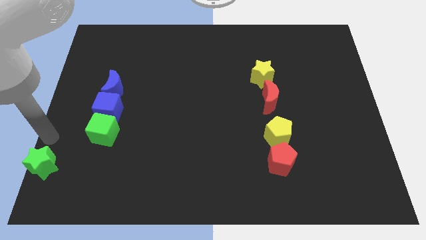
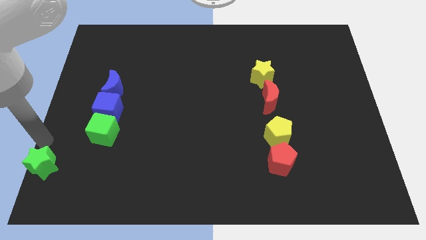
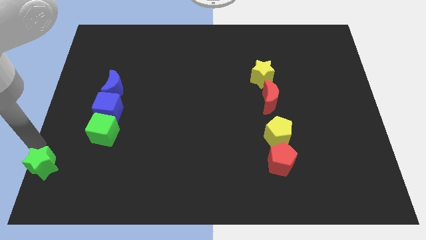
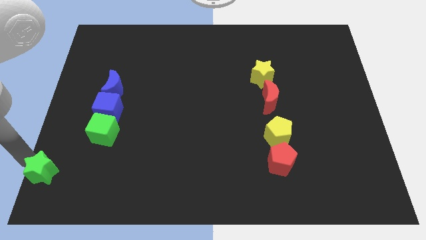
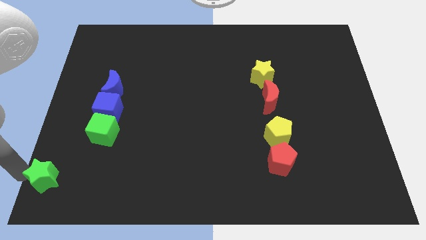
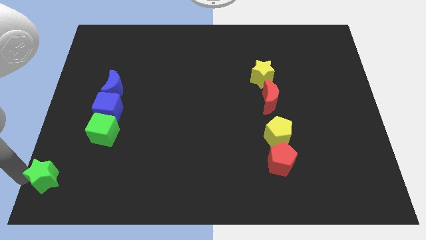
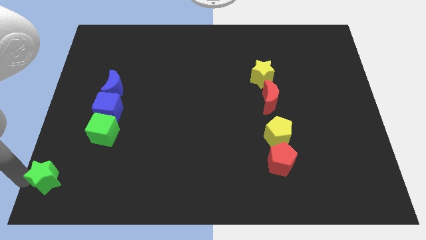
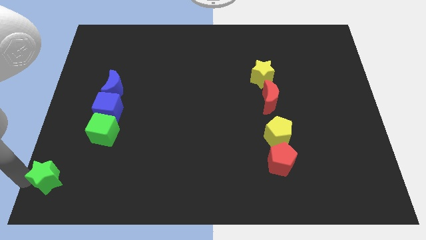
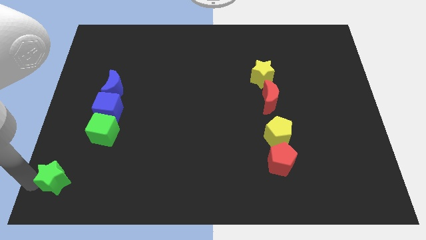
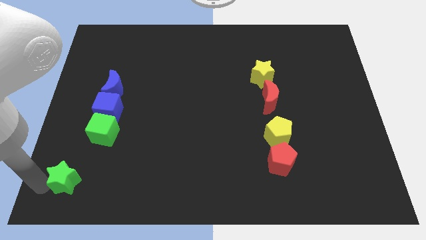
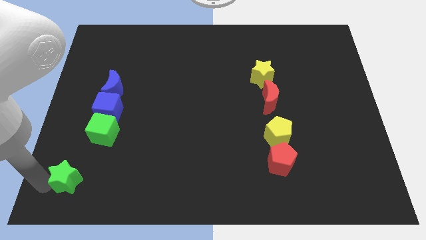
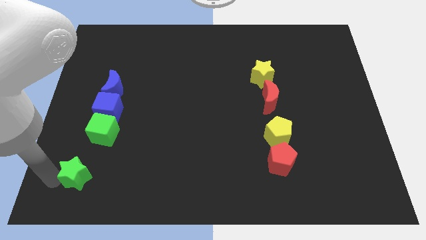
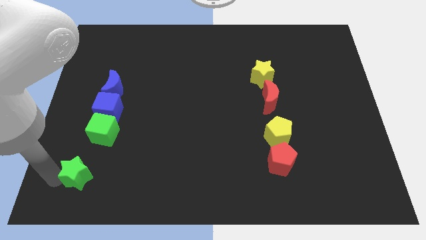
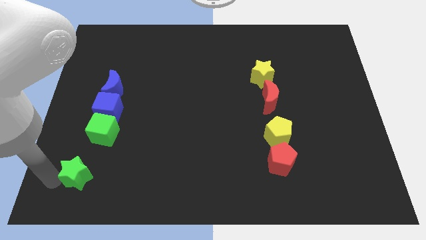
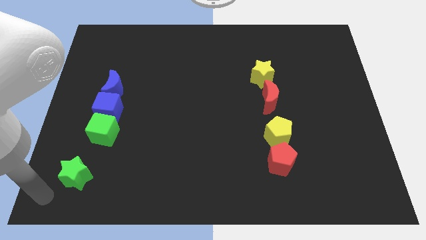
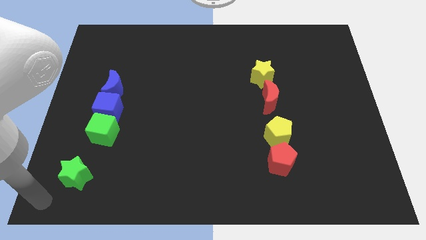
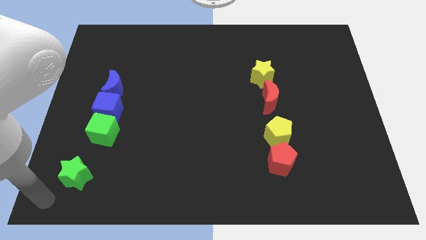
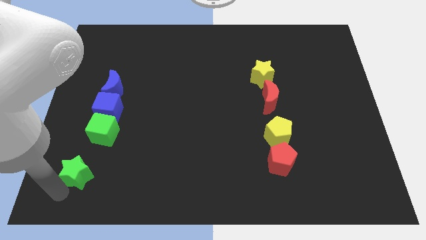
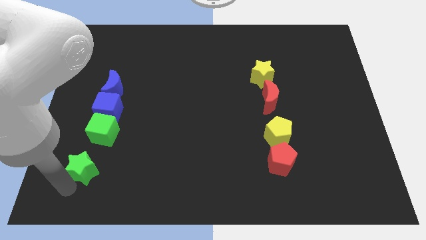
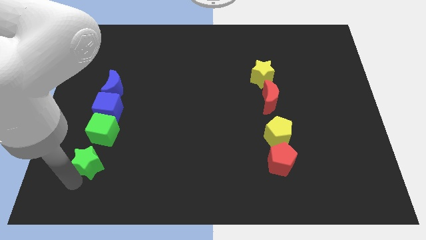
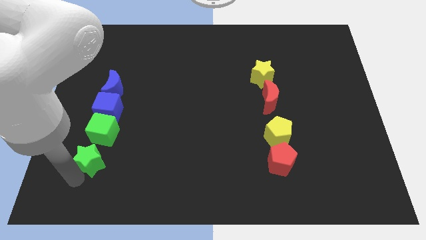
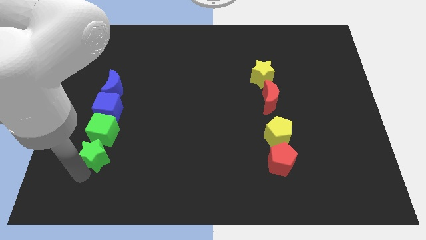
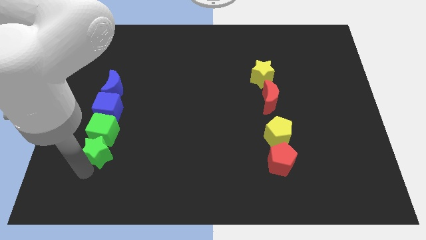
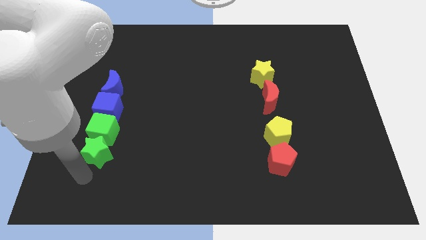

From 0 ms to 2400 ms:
place the green star to the bottom of the green cube

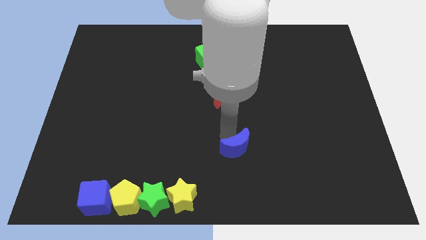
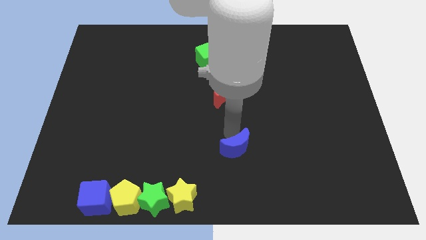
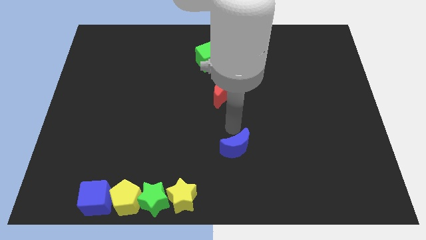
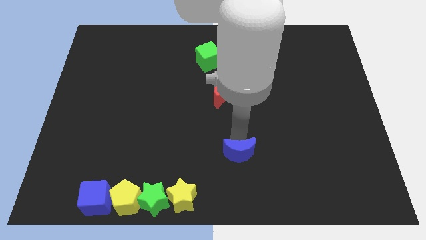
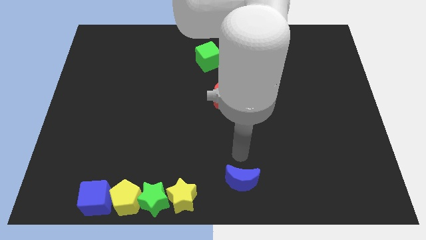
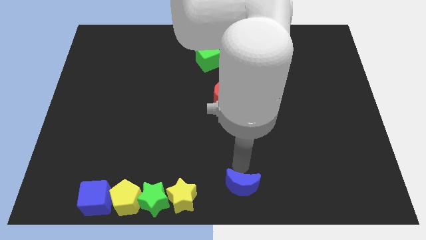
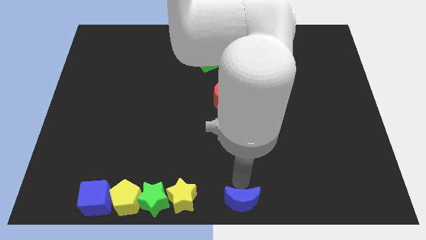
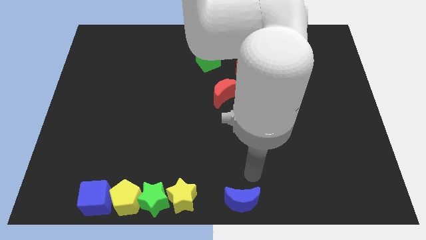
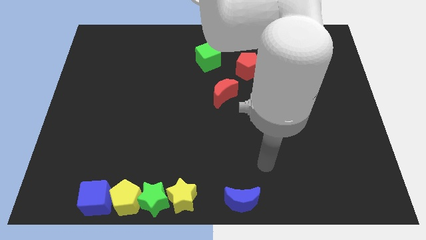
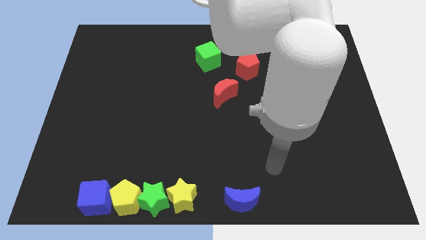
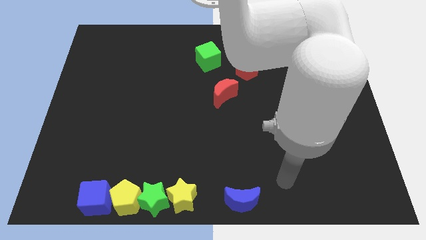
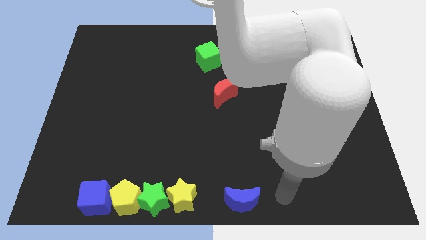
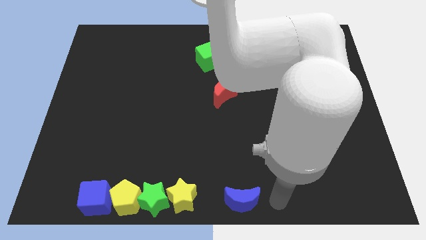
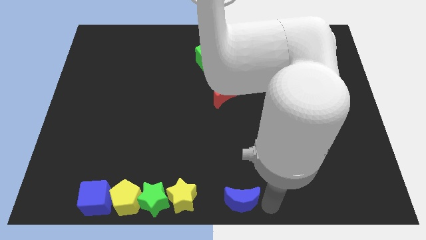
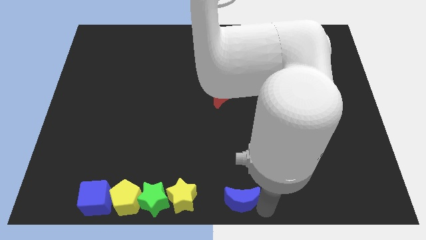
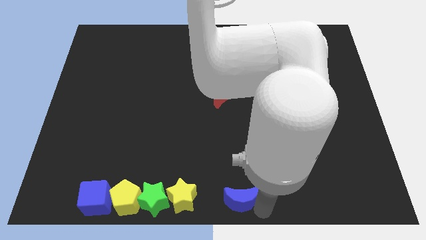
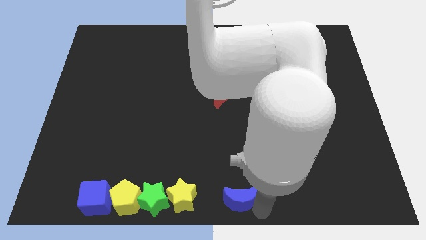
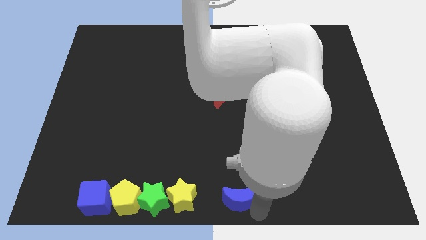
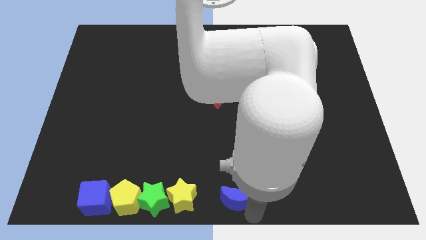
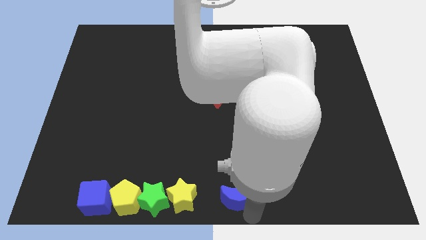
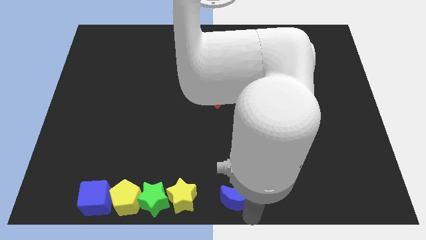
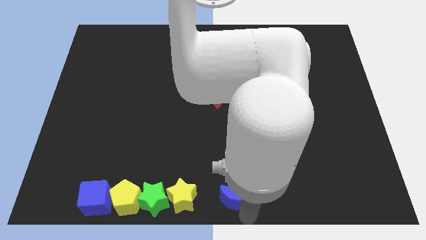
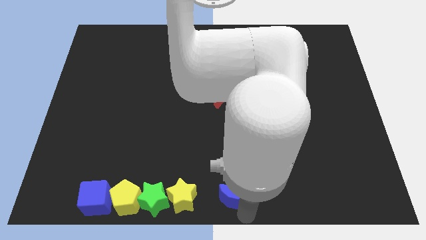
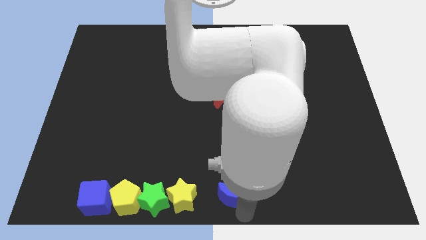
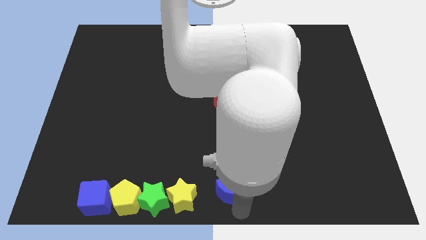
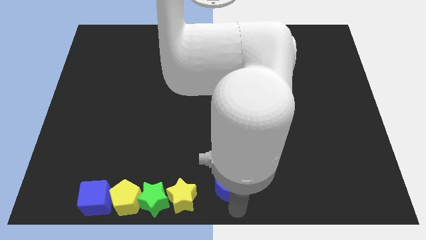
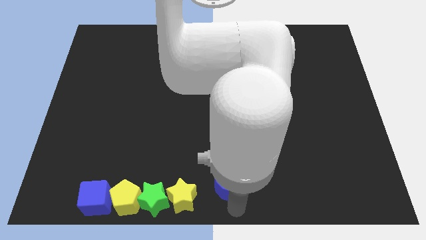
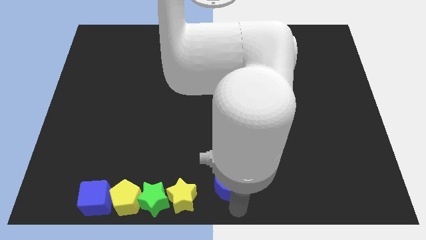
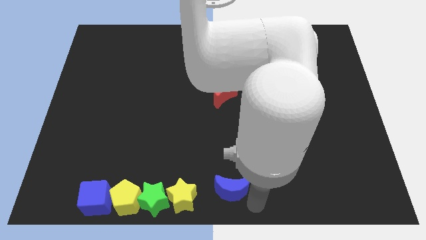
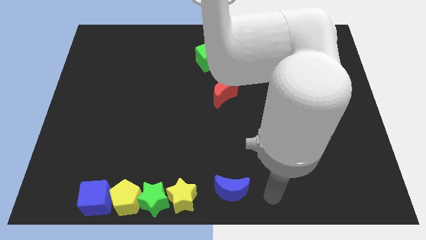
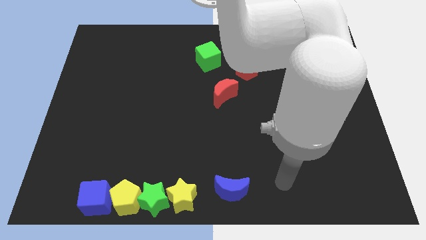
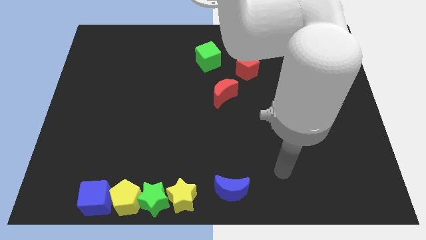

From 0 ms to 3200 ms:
place blue moon to the center bottom of the board

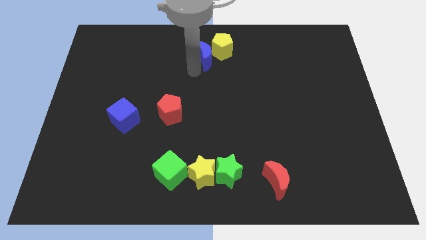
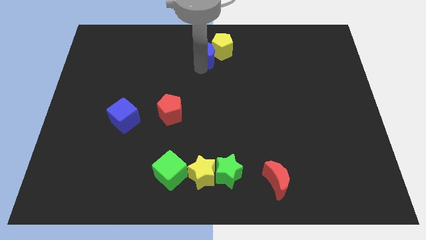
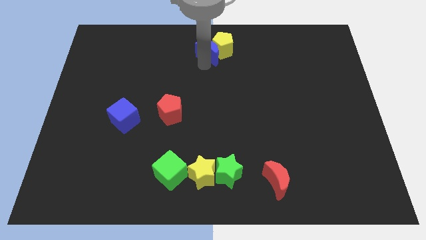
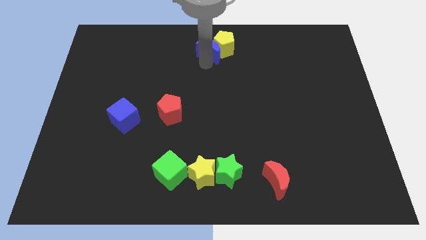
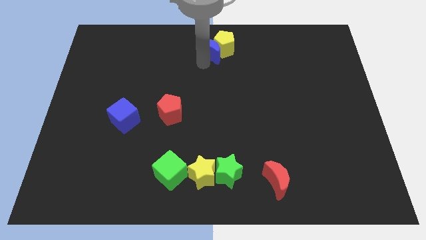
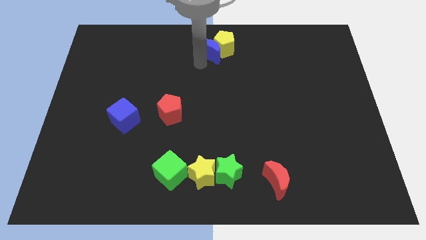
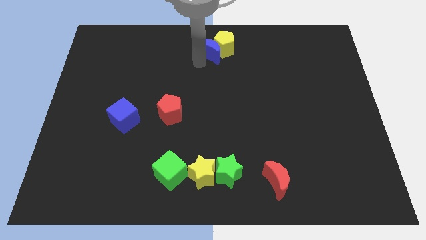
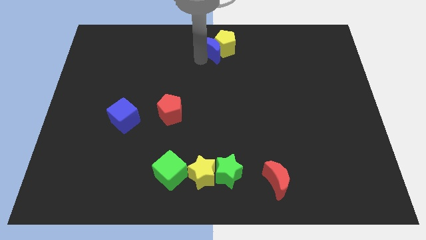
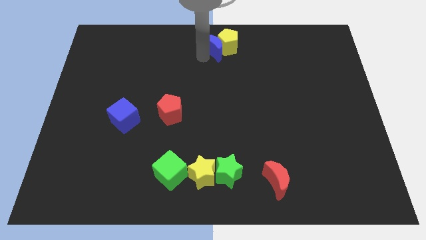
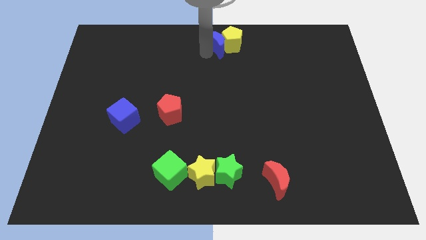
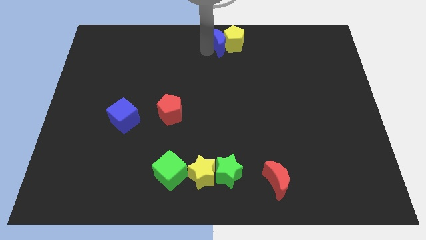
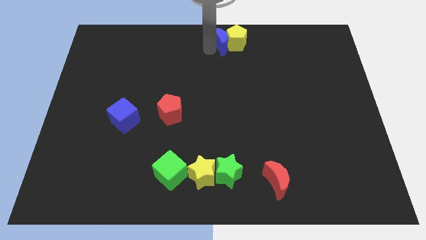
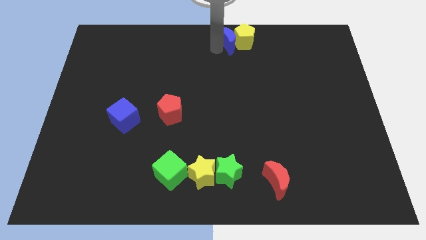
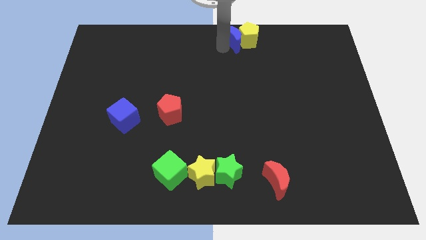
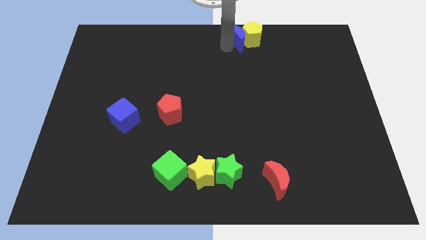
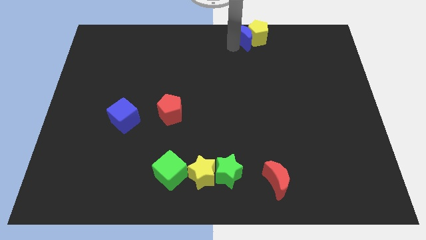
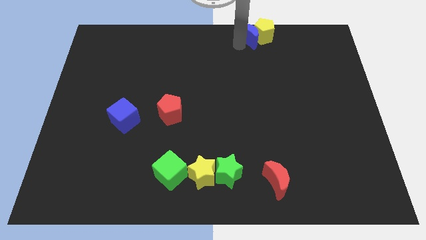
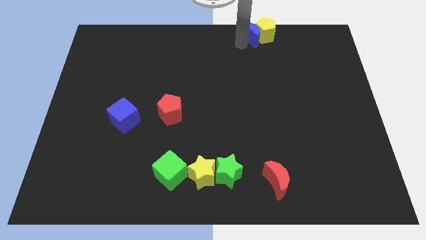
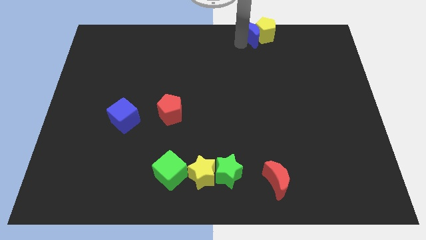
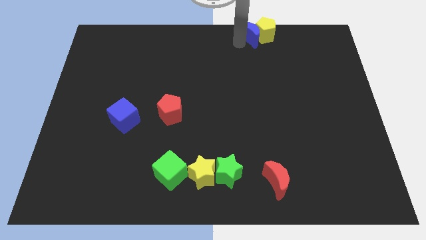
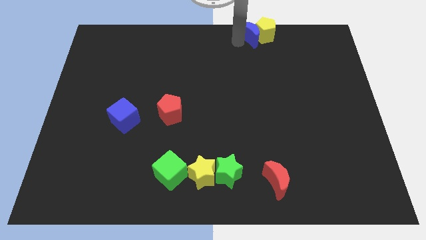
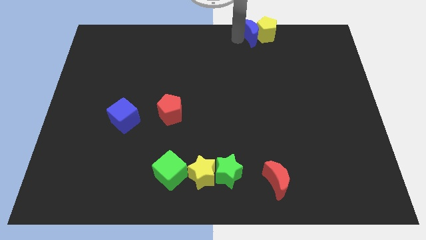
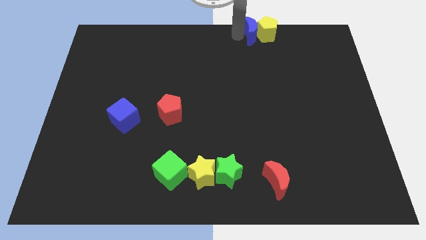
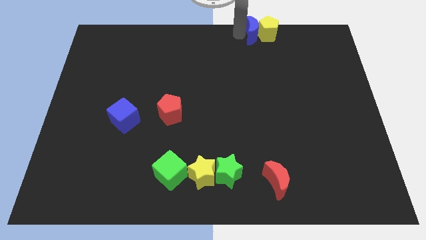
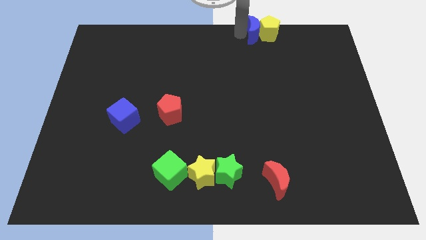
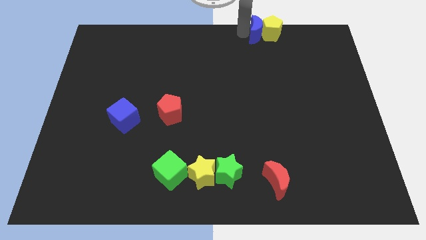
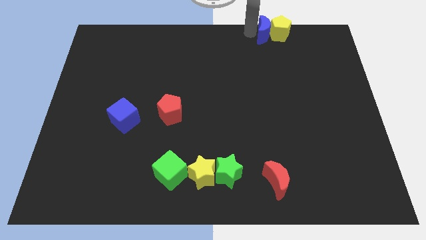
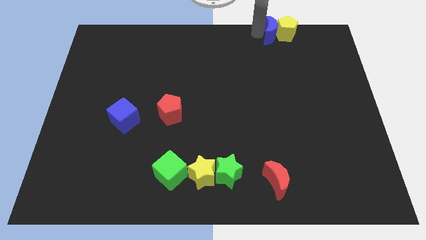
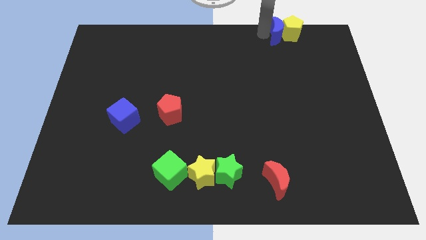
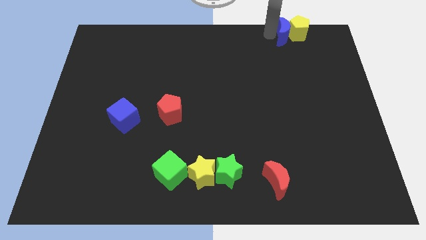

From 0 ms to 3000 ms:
slightly push the yellow pentagon with the blue moon up

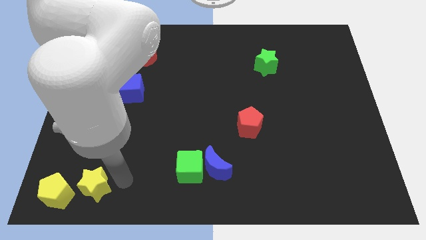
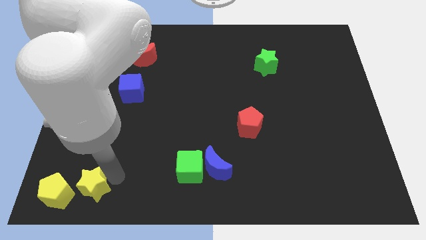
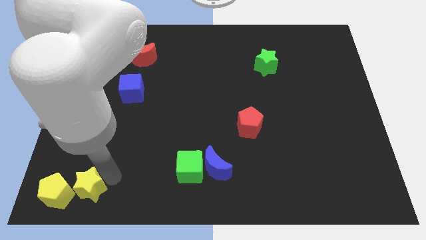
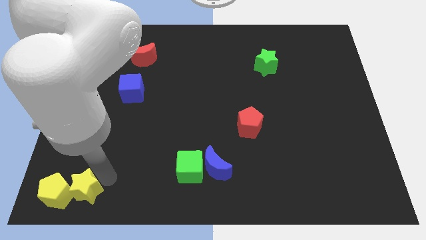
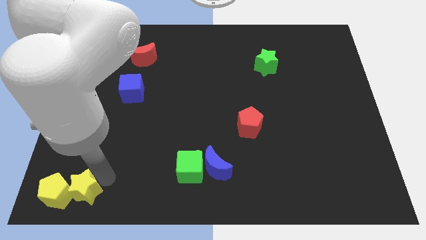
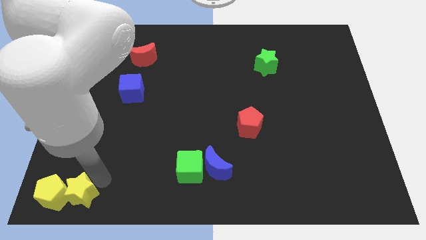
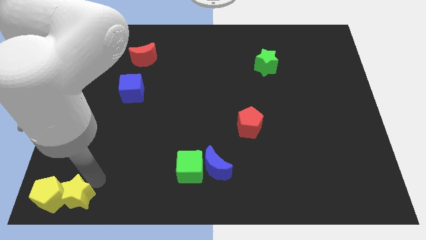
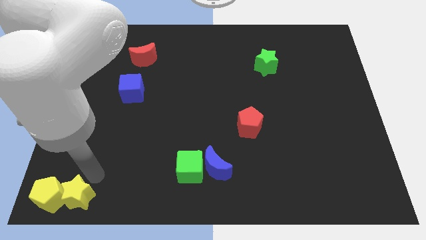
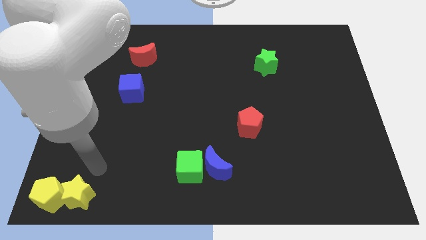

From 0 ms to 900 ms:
push yellow star in between yellow pentagon
